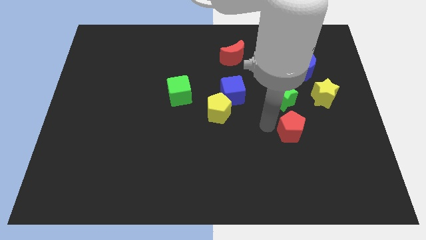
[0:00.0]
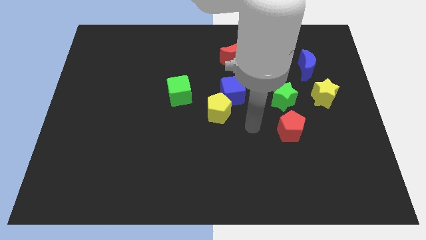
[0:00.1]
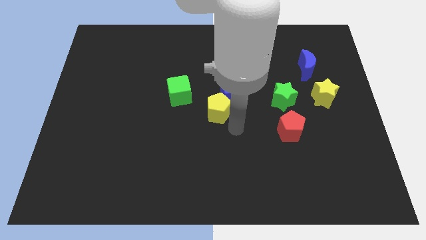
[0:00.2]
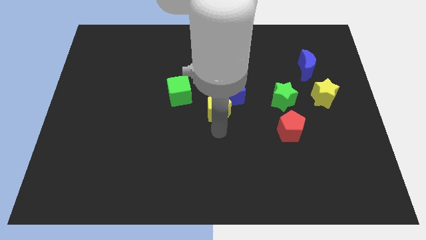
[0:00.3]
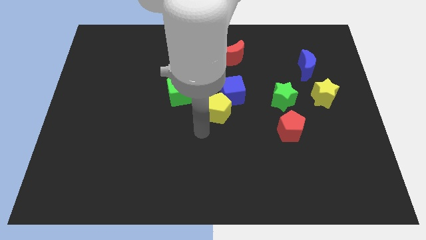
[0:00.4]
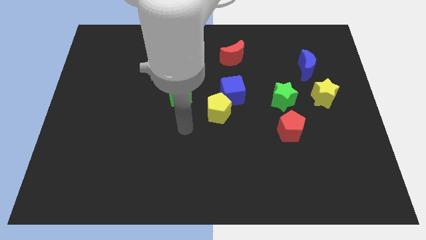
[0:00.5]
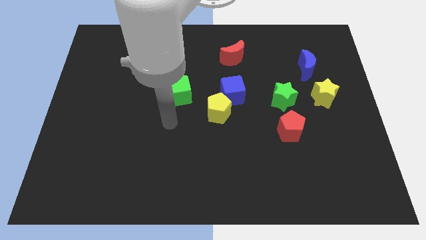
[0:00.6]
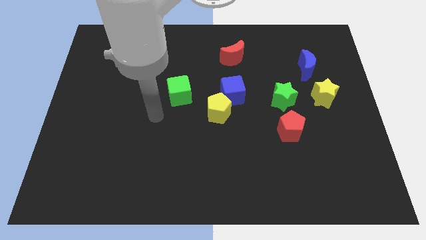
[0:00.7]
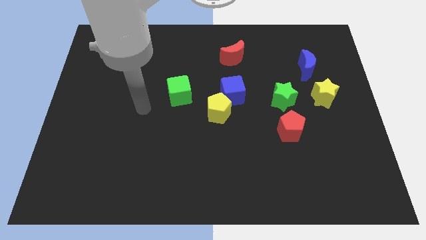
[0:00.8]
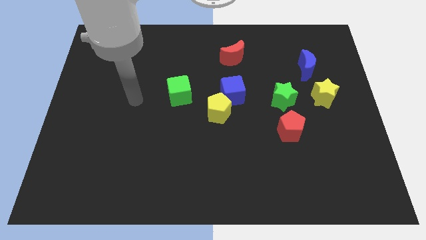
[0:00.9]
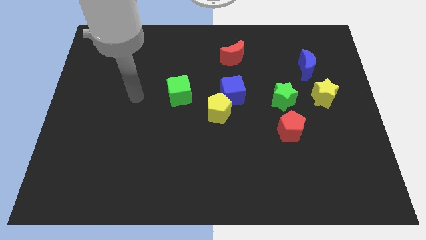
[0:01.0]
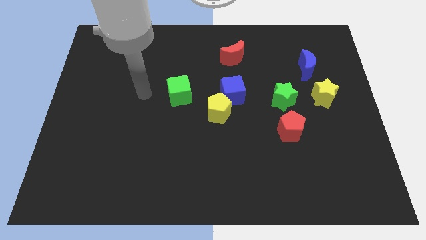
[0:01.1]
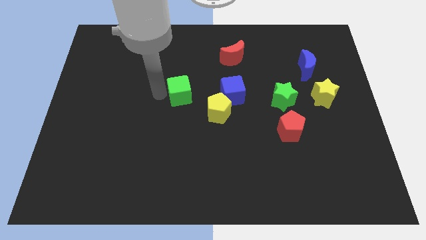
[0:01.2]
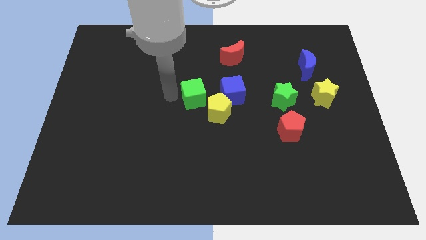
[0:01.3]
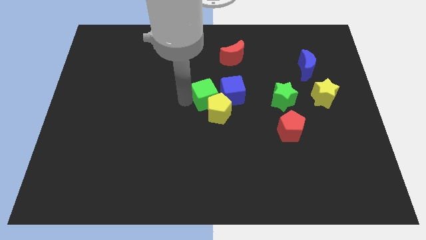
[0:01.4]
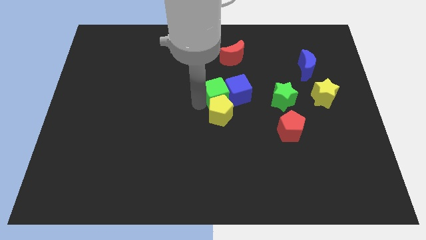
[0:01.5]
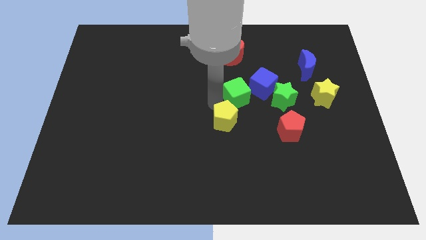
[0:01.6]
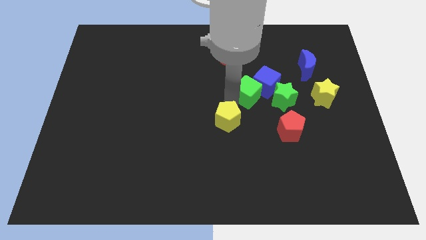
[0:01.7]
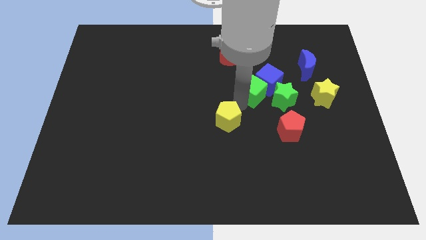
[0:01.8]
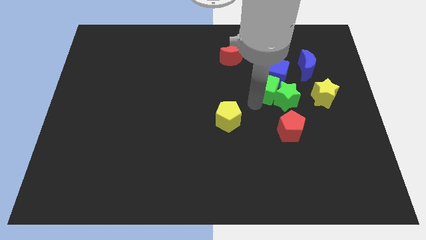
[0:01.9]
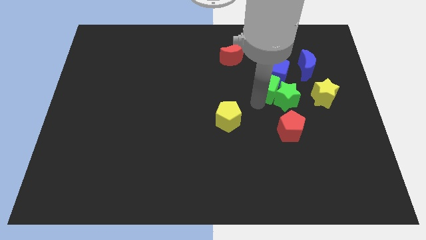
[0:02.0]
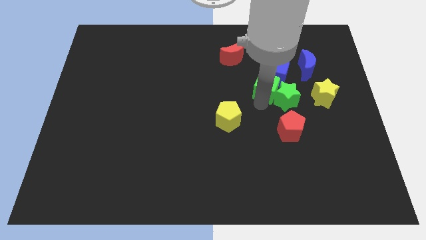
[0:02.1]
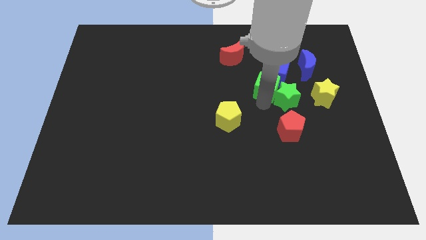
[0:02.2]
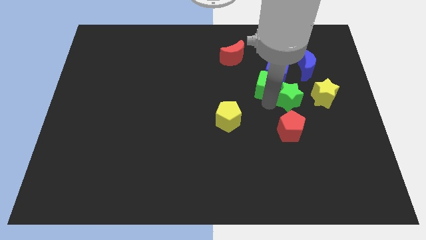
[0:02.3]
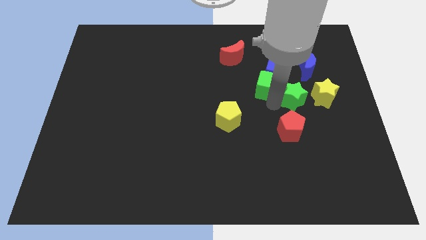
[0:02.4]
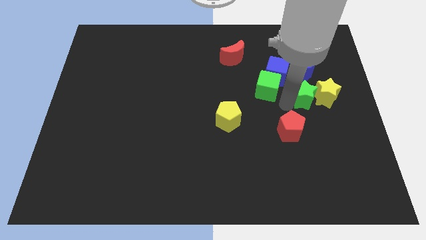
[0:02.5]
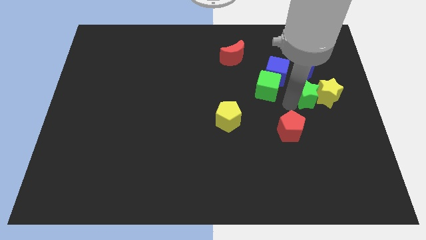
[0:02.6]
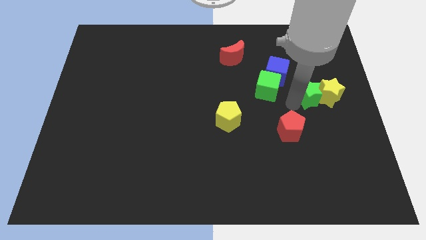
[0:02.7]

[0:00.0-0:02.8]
push the green cube into the blue cube

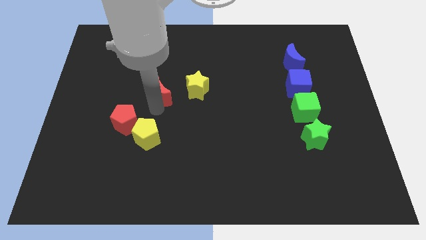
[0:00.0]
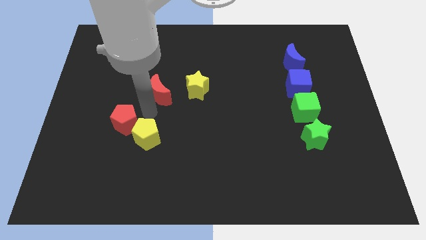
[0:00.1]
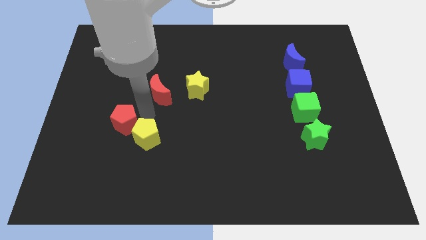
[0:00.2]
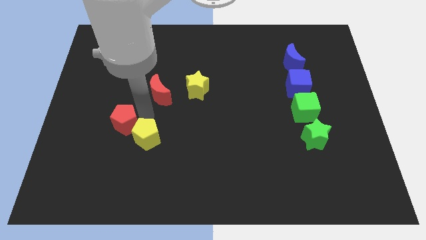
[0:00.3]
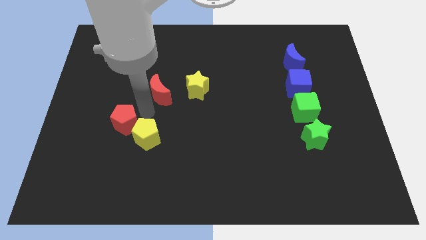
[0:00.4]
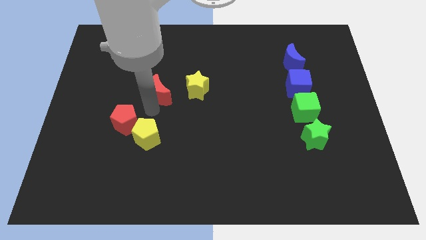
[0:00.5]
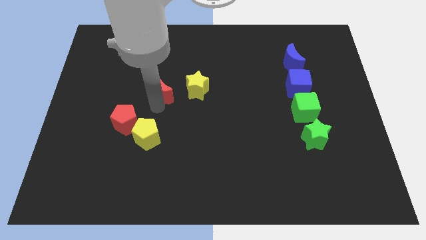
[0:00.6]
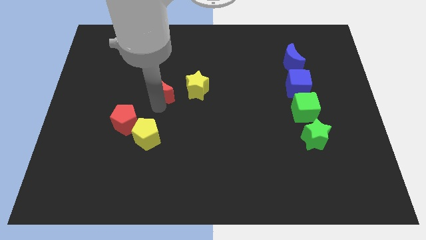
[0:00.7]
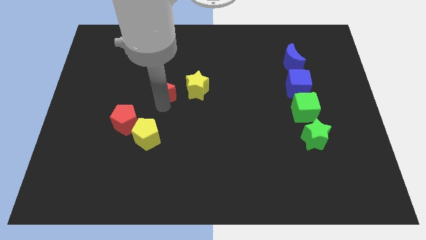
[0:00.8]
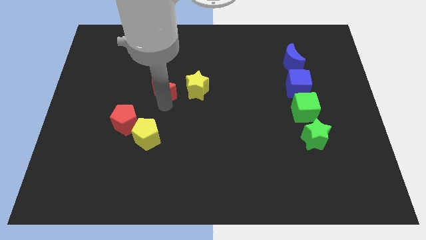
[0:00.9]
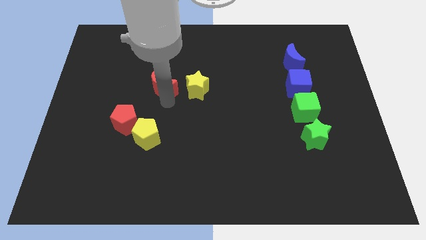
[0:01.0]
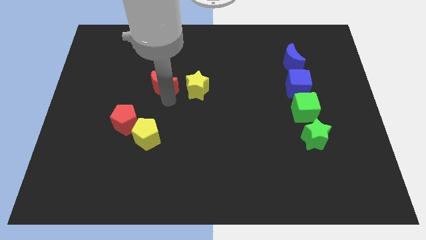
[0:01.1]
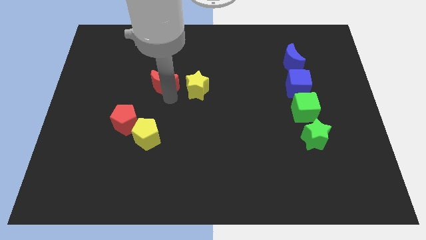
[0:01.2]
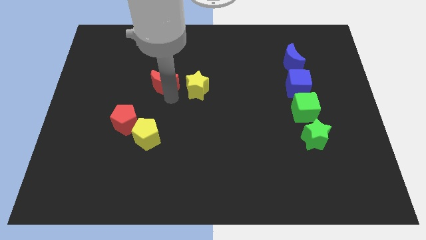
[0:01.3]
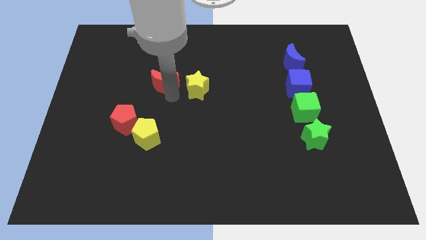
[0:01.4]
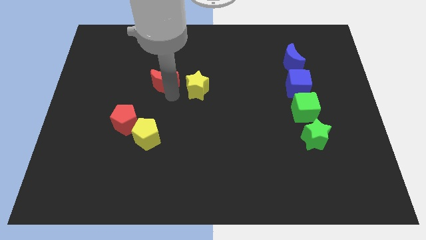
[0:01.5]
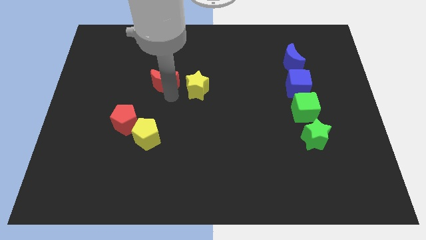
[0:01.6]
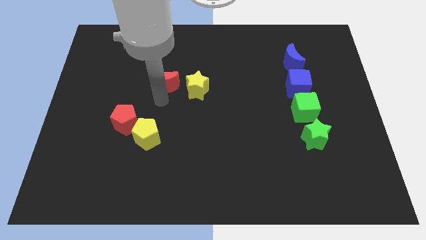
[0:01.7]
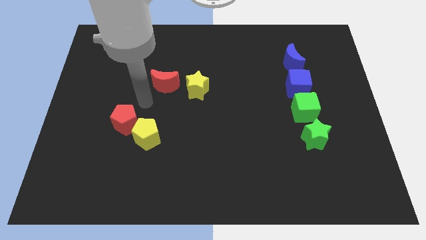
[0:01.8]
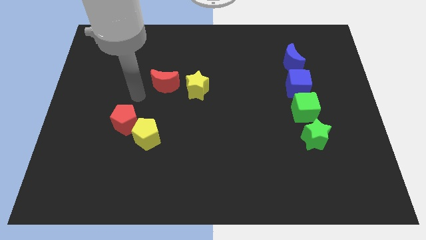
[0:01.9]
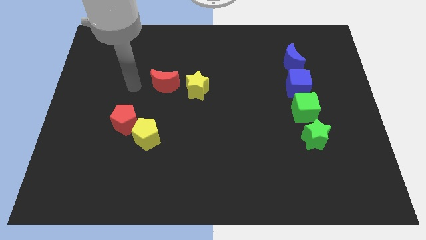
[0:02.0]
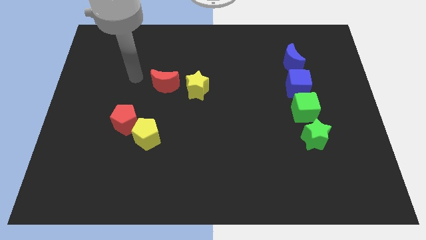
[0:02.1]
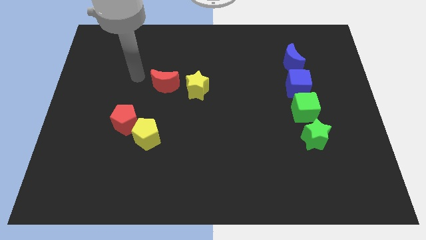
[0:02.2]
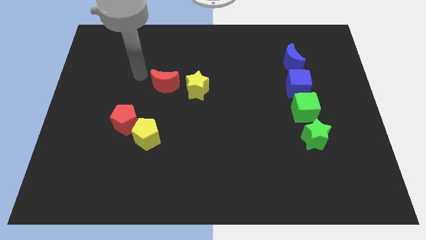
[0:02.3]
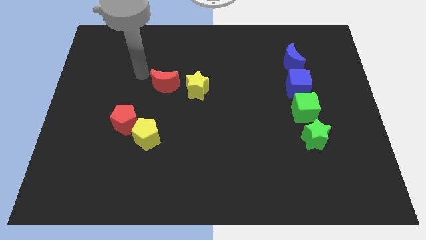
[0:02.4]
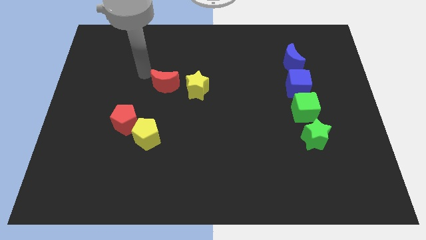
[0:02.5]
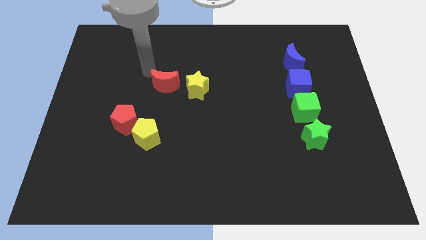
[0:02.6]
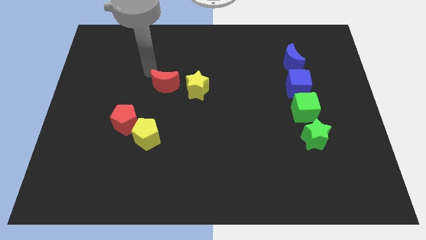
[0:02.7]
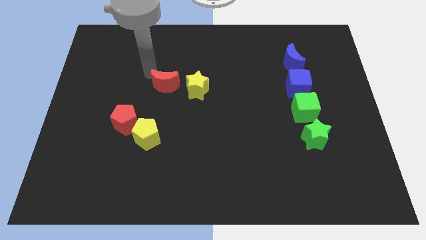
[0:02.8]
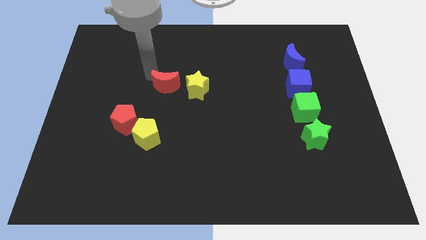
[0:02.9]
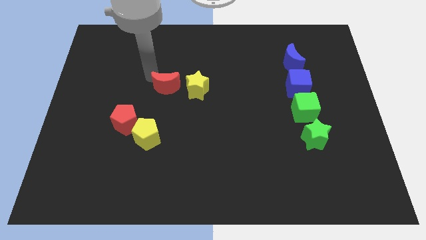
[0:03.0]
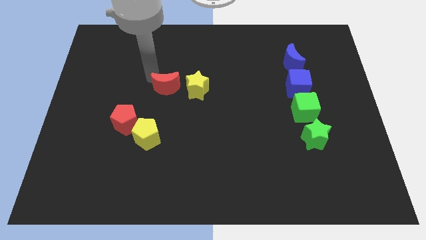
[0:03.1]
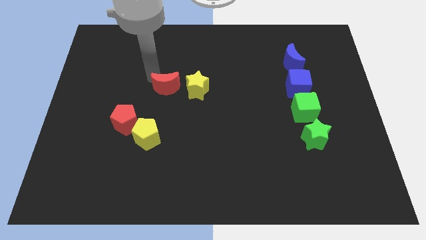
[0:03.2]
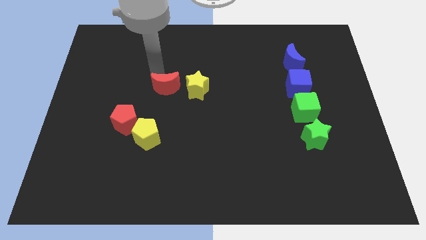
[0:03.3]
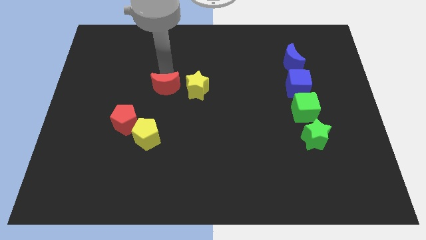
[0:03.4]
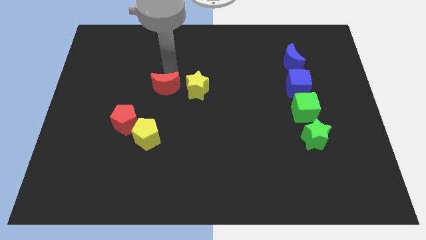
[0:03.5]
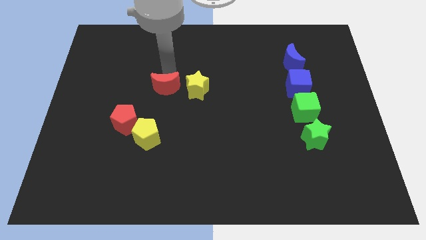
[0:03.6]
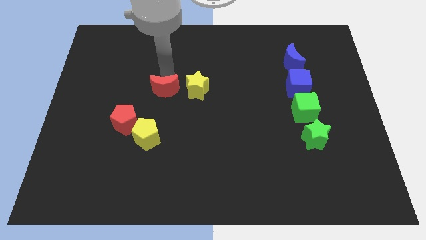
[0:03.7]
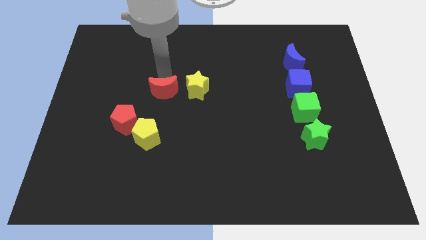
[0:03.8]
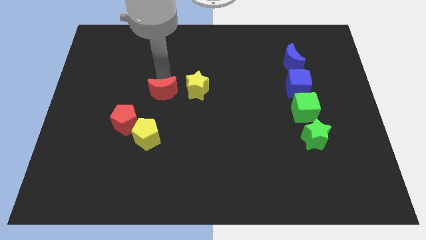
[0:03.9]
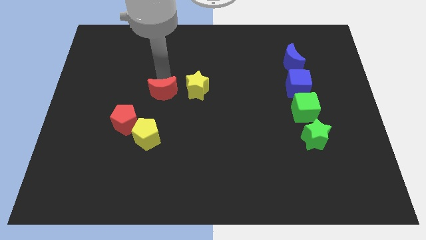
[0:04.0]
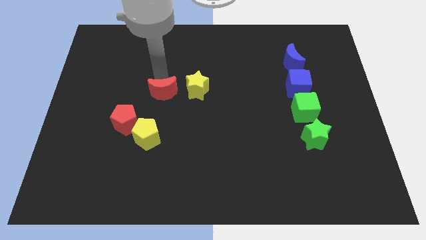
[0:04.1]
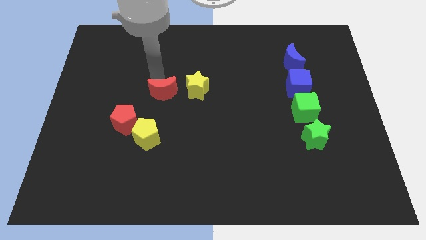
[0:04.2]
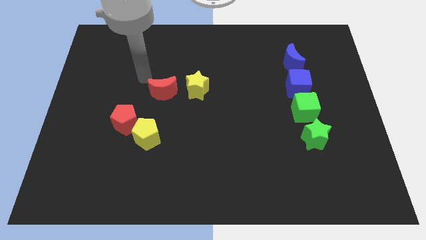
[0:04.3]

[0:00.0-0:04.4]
move the red crescent to the left side of the yellow star

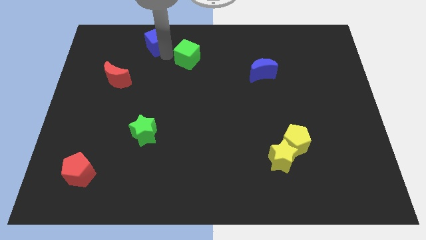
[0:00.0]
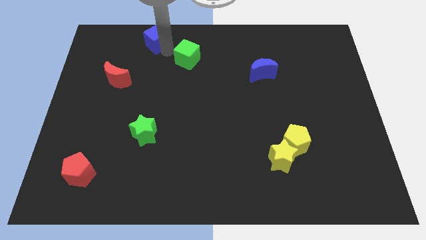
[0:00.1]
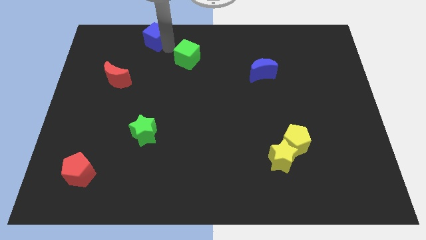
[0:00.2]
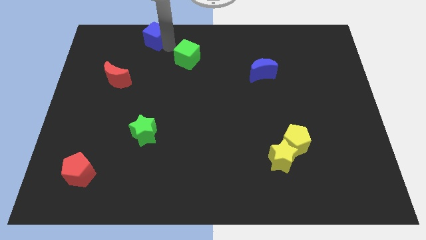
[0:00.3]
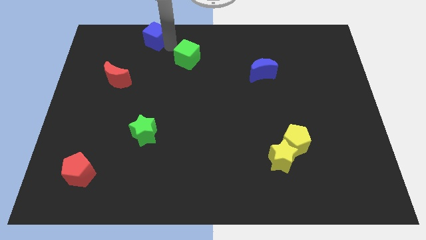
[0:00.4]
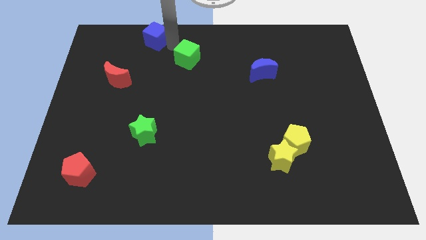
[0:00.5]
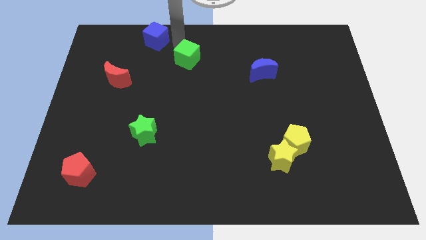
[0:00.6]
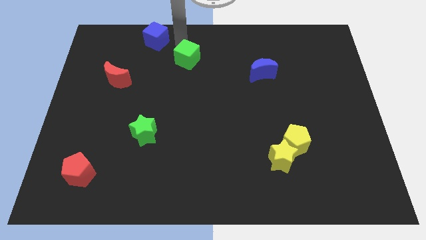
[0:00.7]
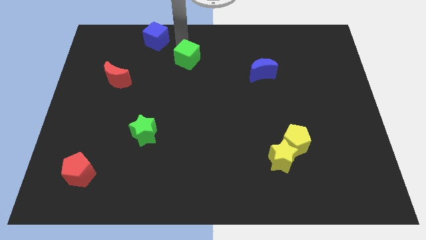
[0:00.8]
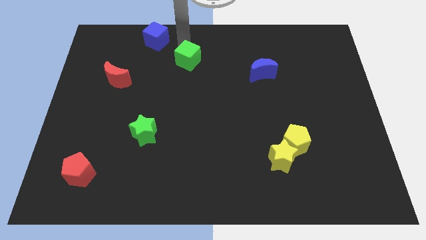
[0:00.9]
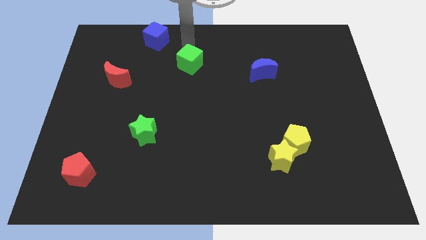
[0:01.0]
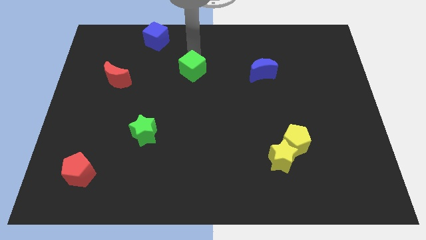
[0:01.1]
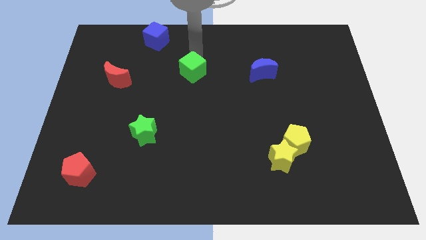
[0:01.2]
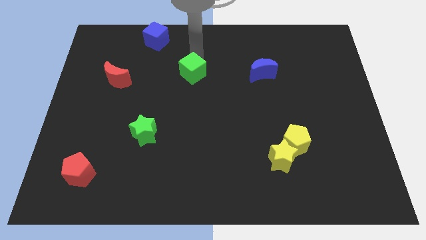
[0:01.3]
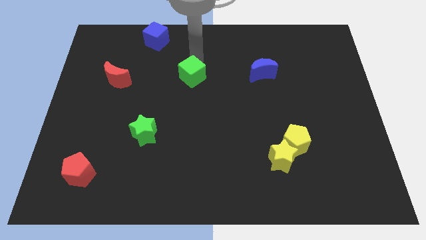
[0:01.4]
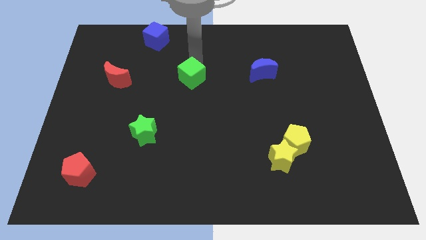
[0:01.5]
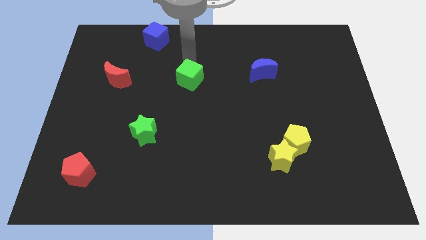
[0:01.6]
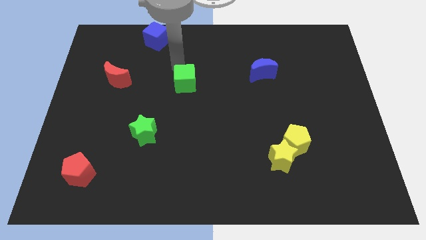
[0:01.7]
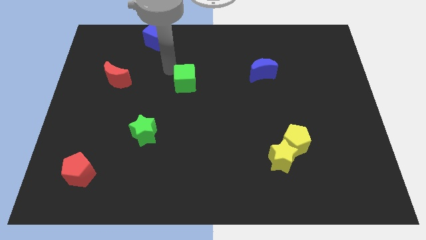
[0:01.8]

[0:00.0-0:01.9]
place green cube to the right of red moon
